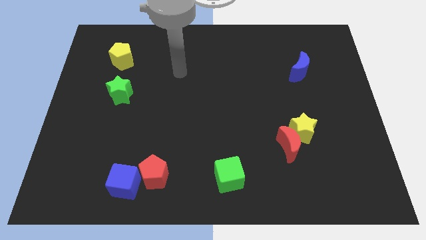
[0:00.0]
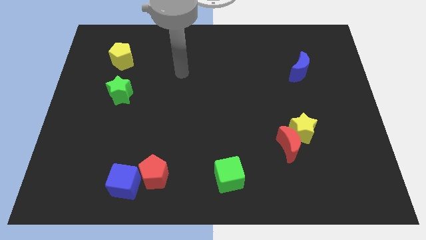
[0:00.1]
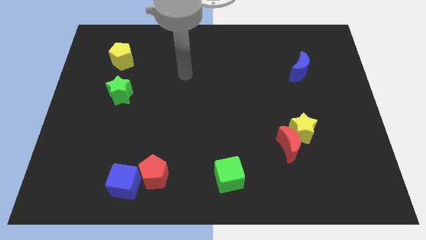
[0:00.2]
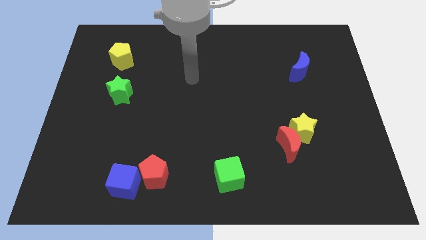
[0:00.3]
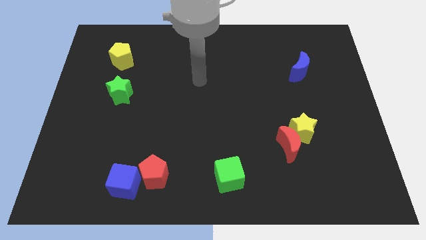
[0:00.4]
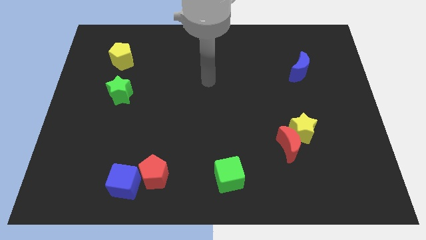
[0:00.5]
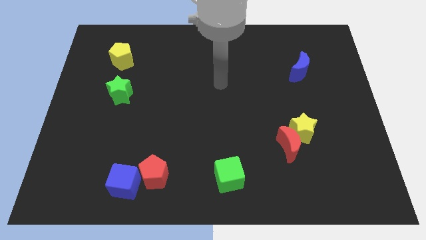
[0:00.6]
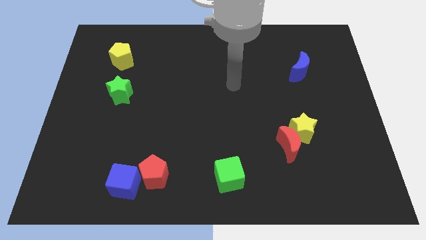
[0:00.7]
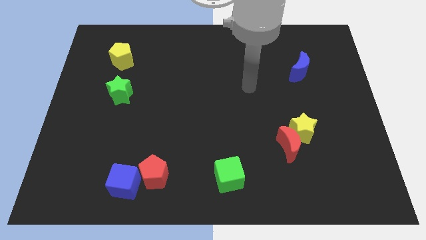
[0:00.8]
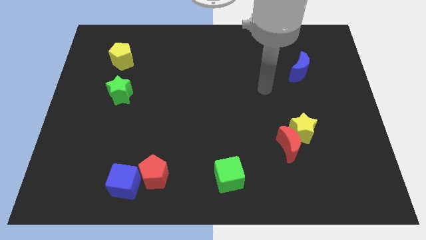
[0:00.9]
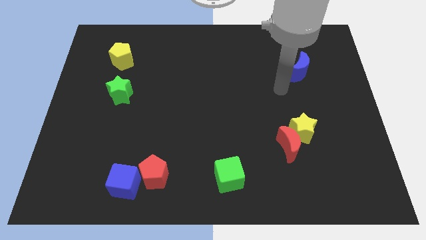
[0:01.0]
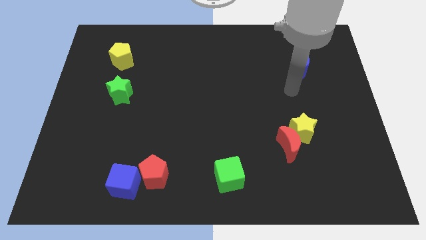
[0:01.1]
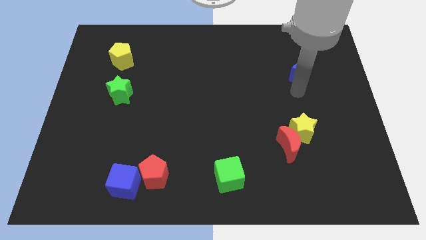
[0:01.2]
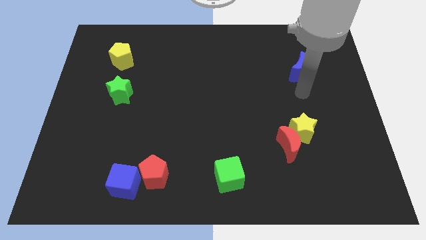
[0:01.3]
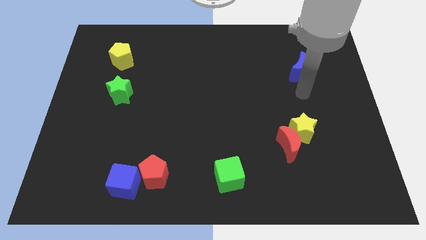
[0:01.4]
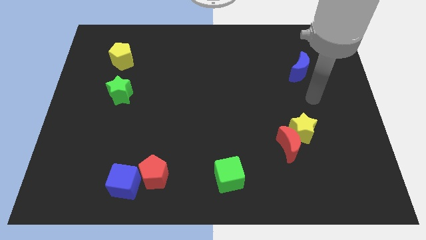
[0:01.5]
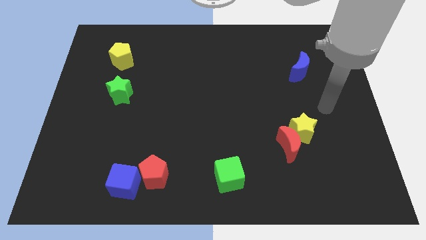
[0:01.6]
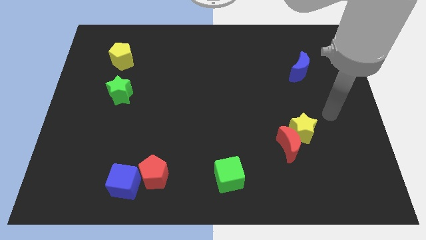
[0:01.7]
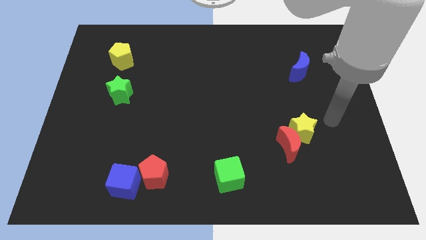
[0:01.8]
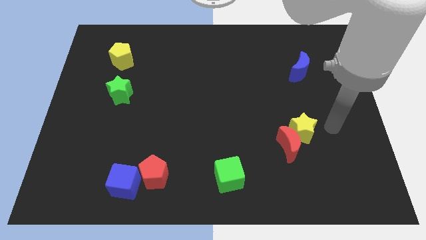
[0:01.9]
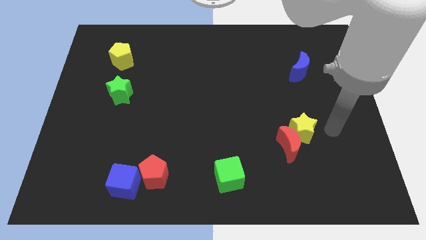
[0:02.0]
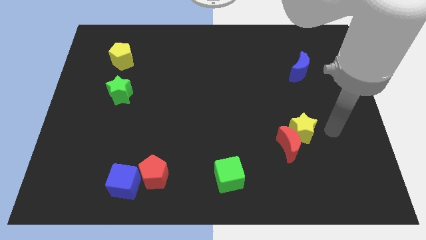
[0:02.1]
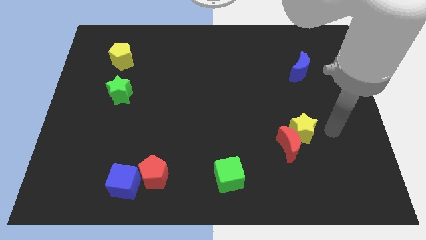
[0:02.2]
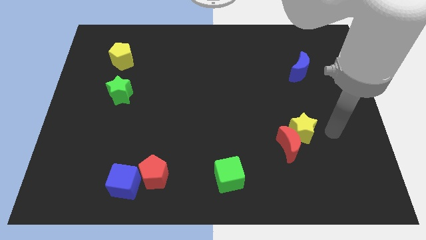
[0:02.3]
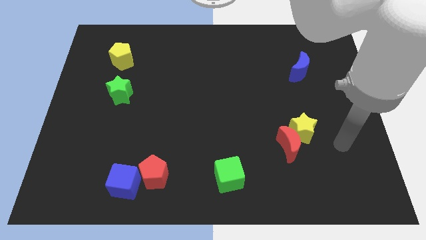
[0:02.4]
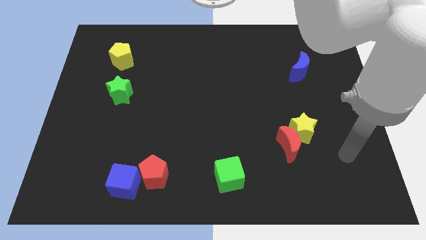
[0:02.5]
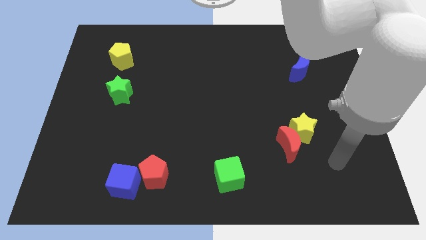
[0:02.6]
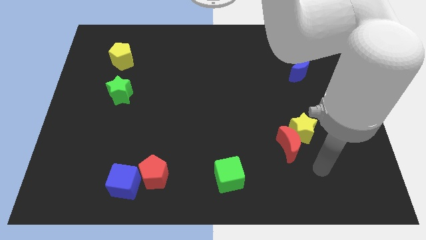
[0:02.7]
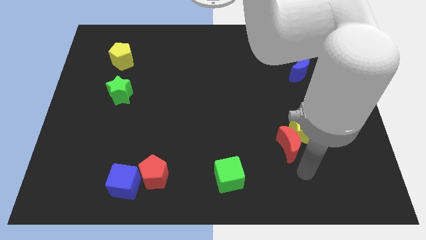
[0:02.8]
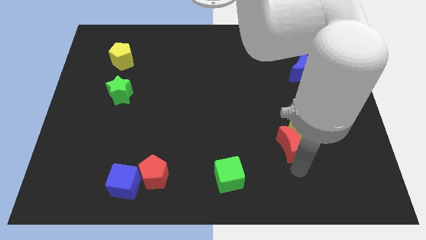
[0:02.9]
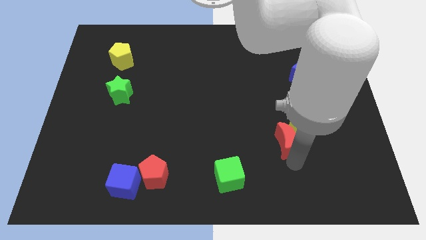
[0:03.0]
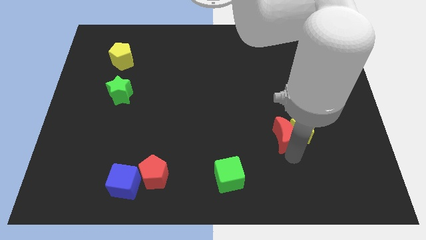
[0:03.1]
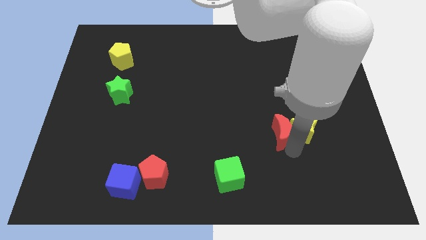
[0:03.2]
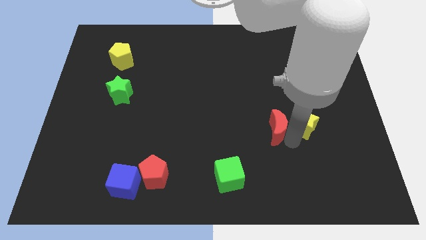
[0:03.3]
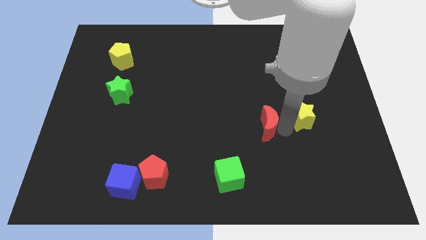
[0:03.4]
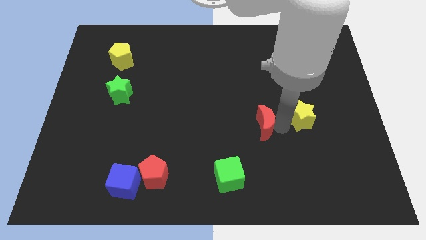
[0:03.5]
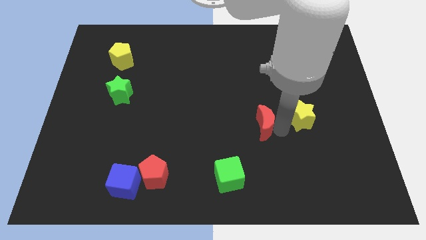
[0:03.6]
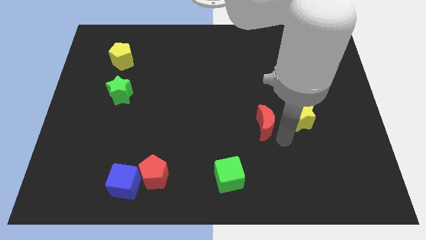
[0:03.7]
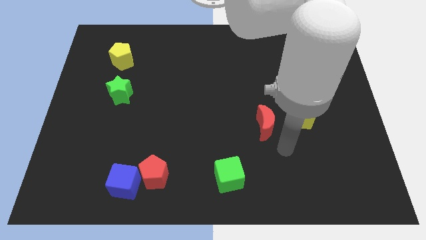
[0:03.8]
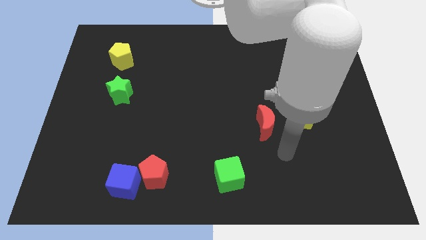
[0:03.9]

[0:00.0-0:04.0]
slightly move the red moon to the top of the board

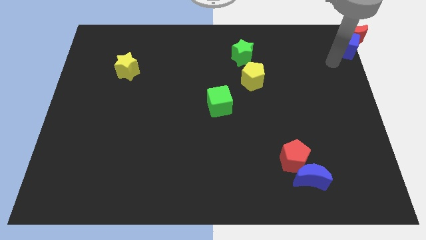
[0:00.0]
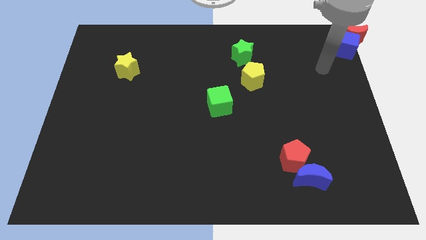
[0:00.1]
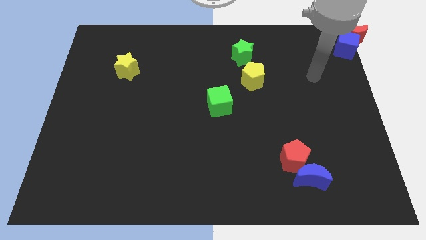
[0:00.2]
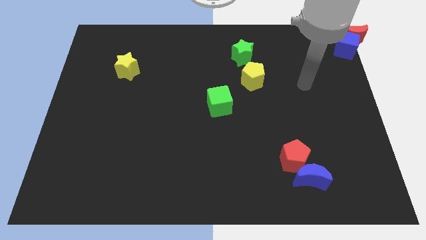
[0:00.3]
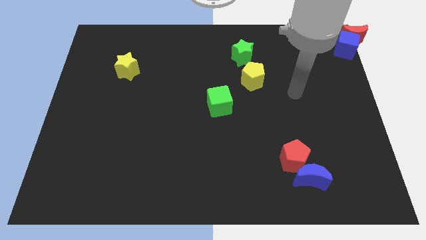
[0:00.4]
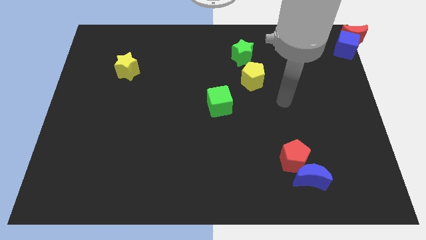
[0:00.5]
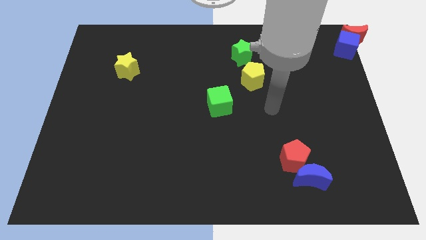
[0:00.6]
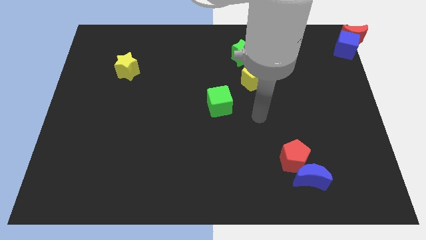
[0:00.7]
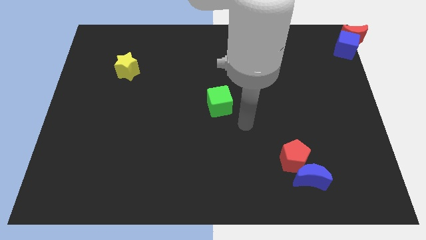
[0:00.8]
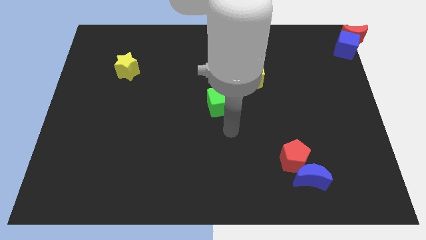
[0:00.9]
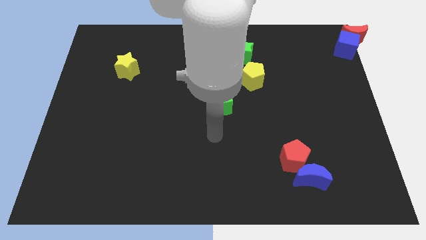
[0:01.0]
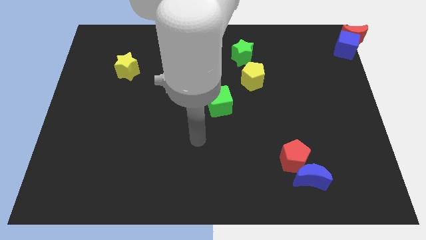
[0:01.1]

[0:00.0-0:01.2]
go away from the blue cube

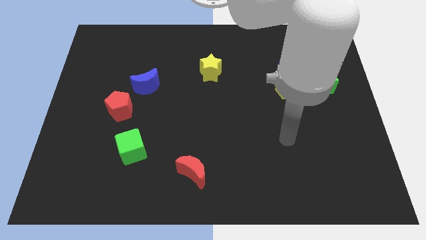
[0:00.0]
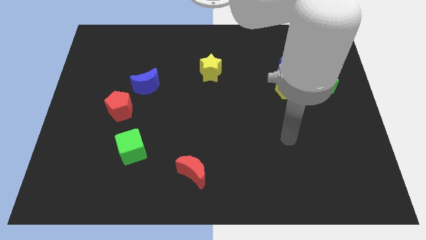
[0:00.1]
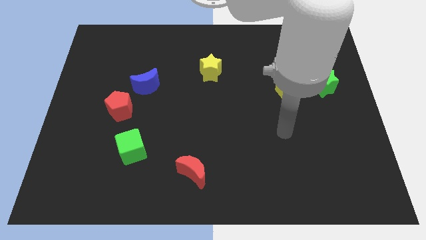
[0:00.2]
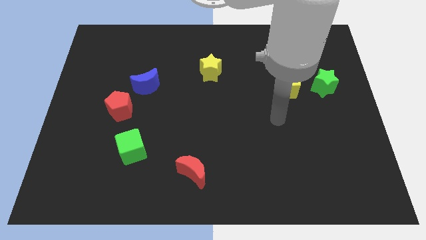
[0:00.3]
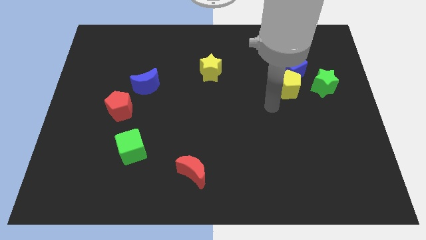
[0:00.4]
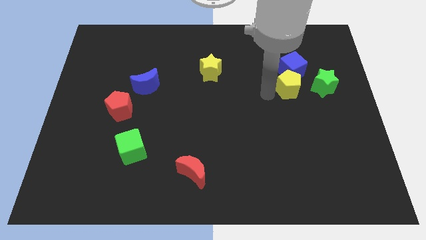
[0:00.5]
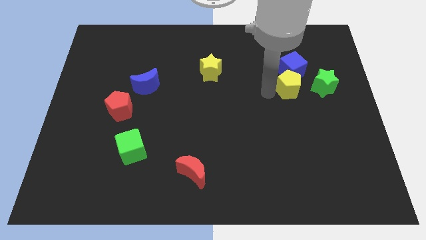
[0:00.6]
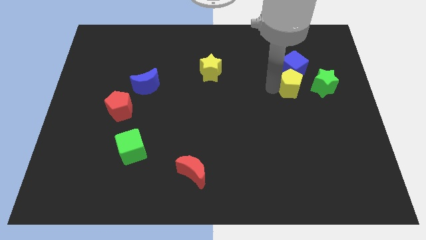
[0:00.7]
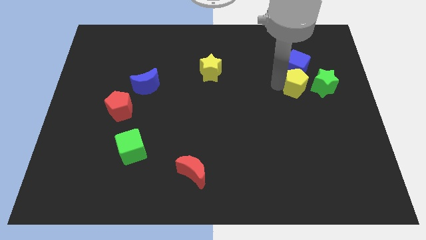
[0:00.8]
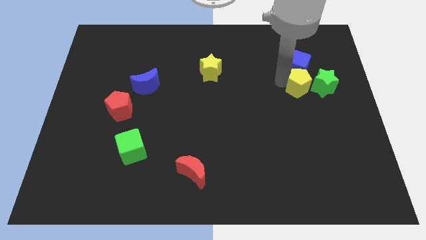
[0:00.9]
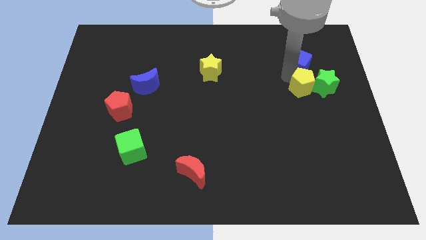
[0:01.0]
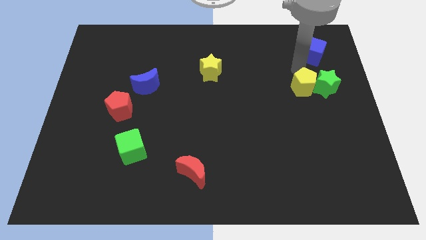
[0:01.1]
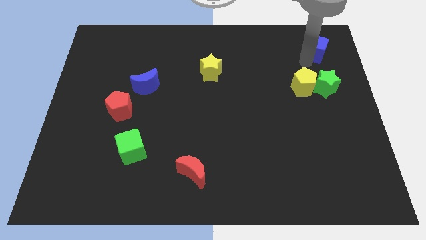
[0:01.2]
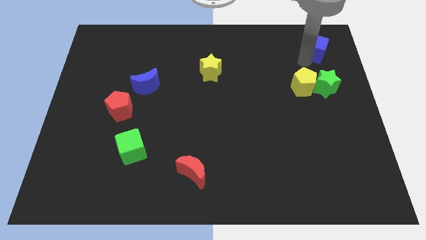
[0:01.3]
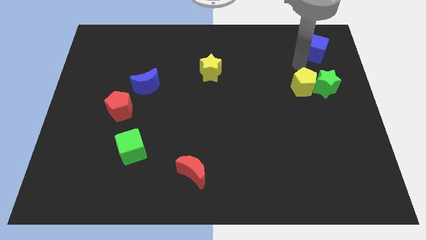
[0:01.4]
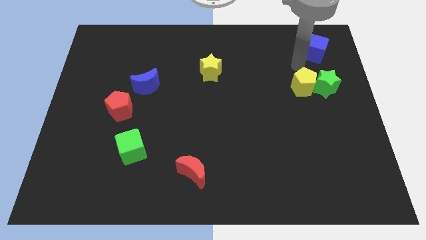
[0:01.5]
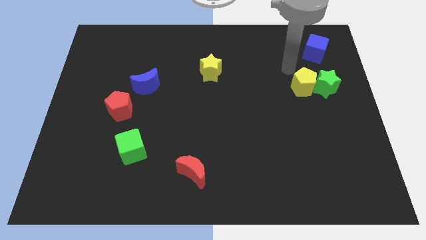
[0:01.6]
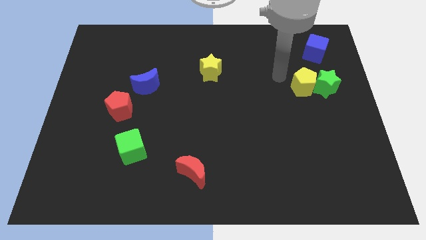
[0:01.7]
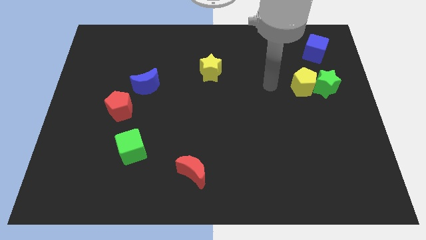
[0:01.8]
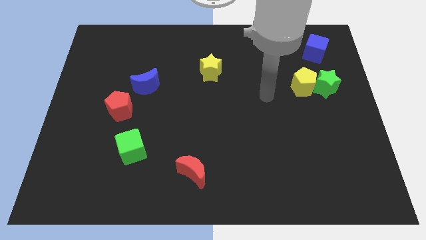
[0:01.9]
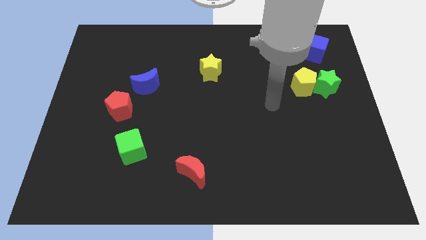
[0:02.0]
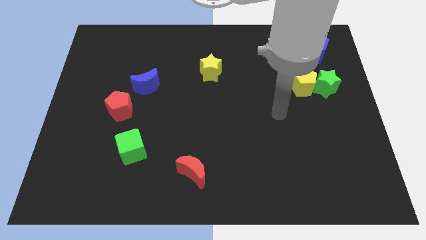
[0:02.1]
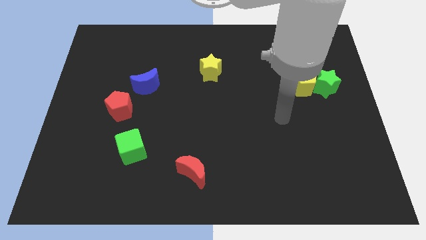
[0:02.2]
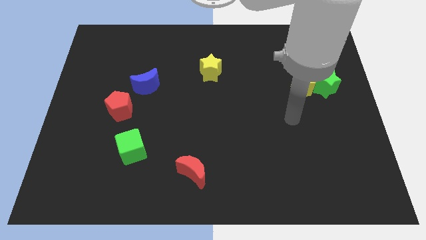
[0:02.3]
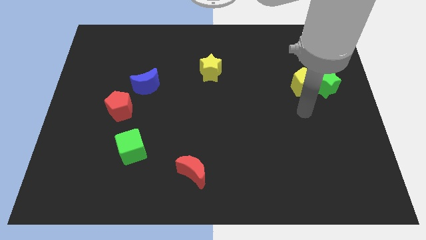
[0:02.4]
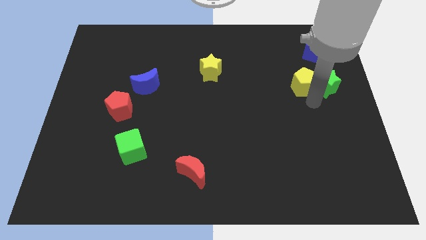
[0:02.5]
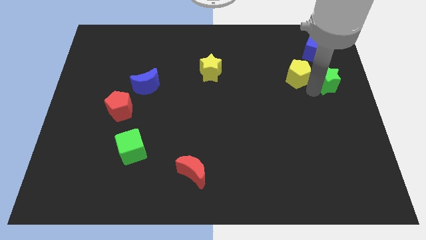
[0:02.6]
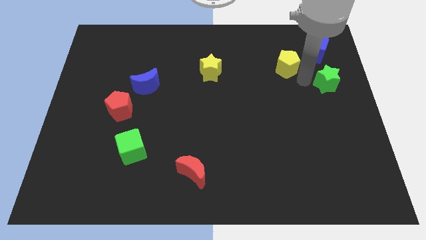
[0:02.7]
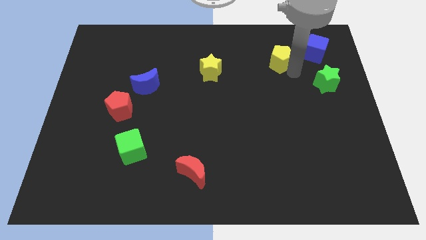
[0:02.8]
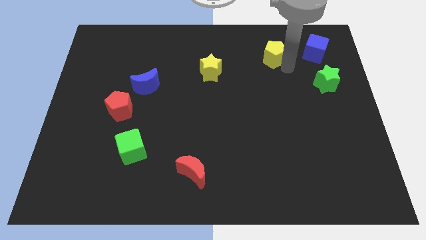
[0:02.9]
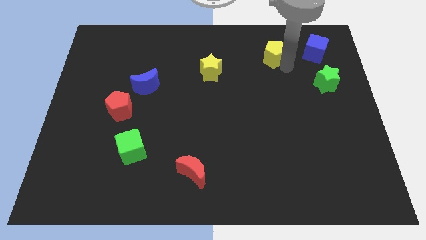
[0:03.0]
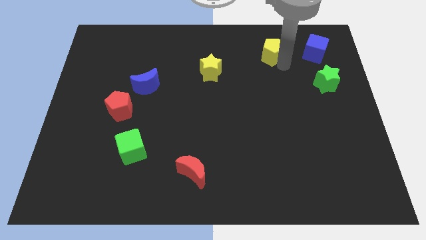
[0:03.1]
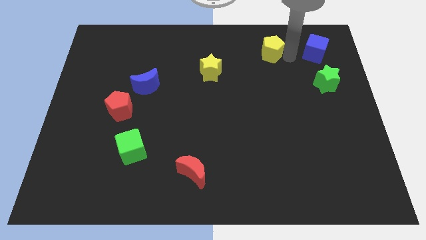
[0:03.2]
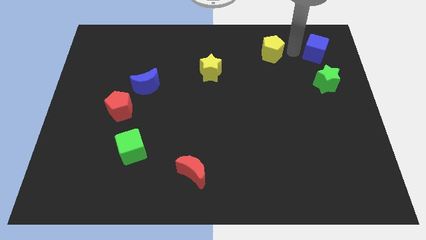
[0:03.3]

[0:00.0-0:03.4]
place the yellow pentagon in between blue cube and yellow star

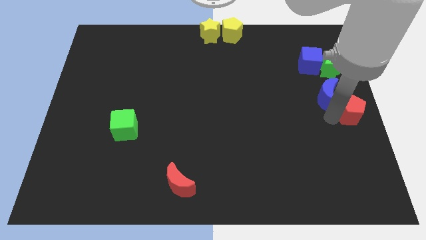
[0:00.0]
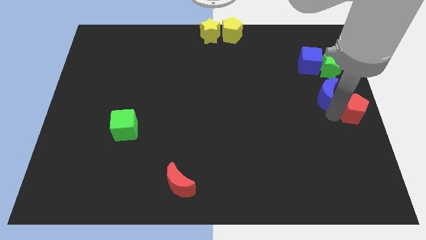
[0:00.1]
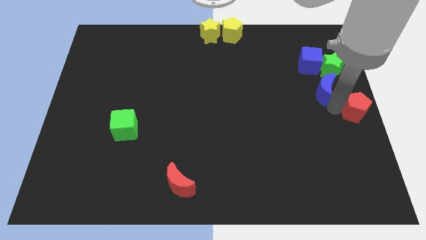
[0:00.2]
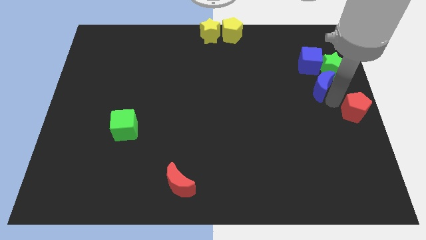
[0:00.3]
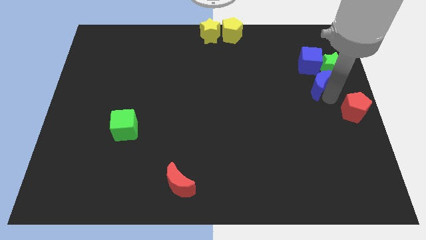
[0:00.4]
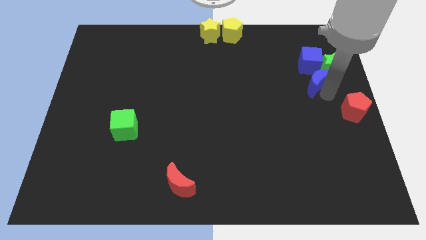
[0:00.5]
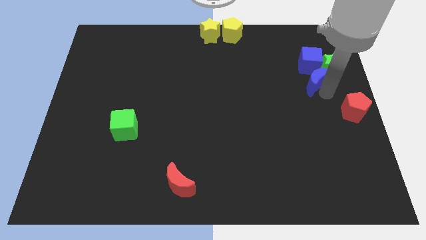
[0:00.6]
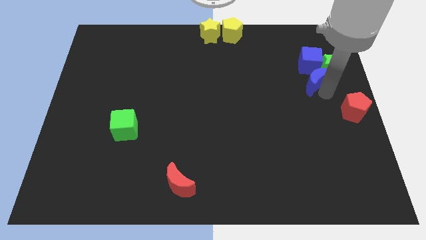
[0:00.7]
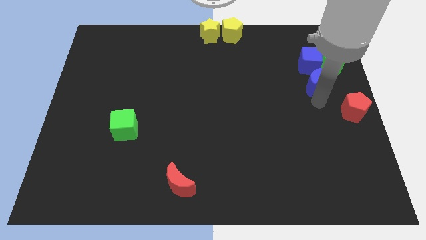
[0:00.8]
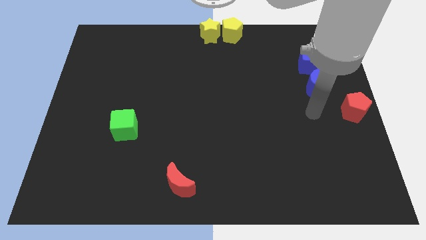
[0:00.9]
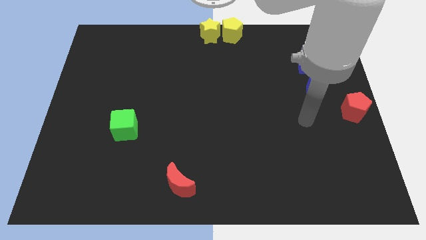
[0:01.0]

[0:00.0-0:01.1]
push the blue moon towards the blue cube
